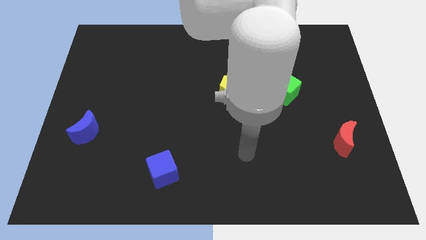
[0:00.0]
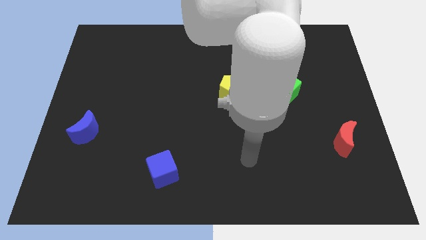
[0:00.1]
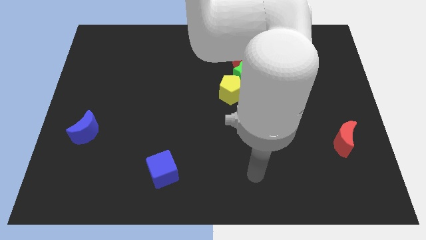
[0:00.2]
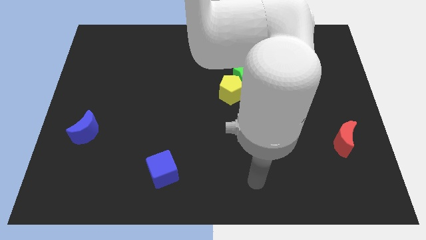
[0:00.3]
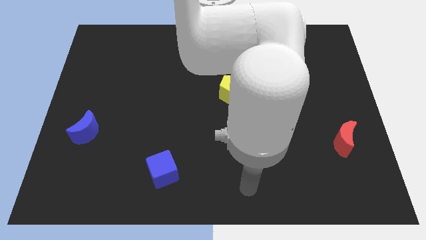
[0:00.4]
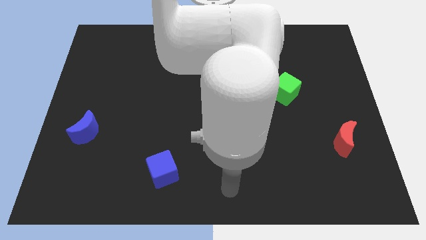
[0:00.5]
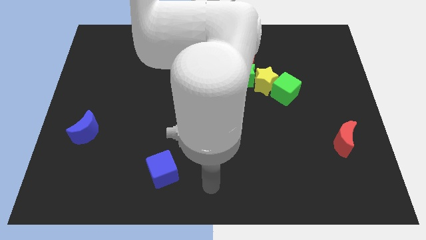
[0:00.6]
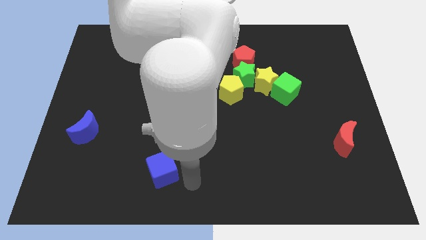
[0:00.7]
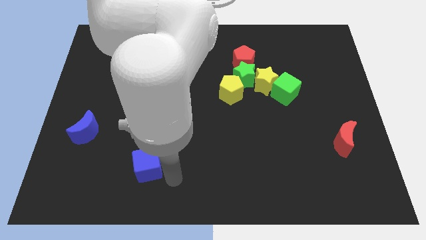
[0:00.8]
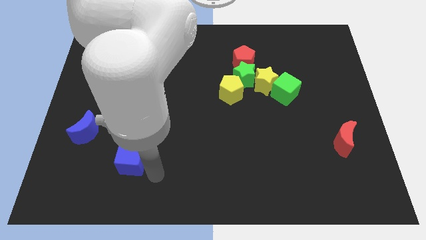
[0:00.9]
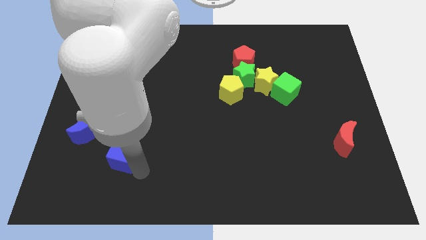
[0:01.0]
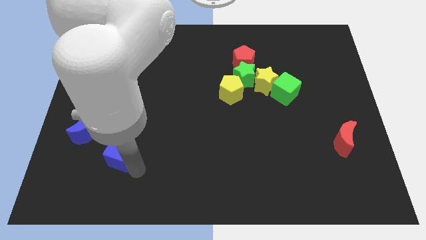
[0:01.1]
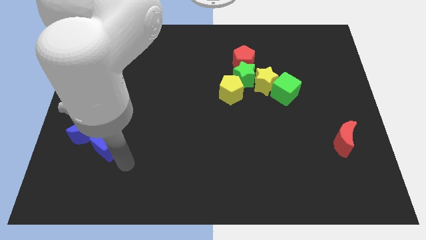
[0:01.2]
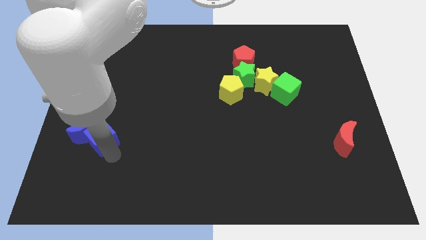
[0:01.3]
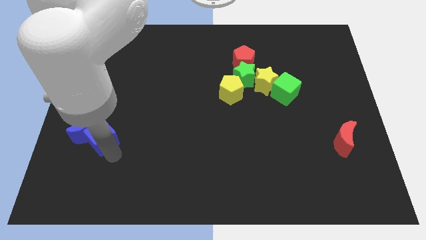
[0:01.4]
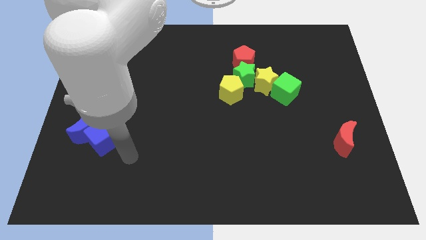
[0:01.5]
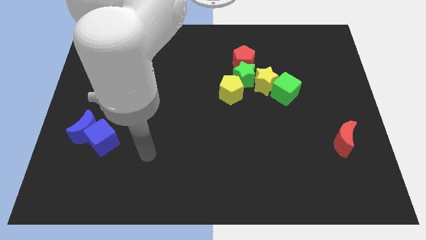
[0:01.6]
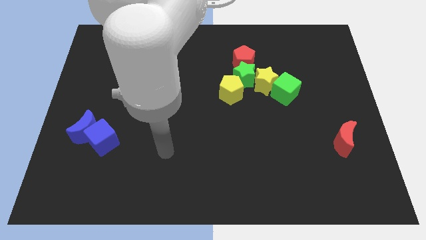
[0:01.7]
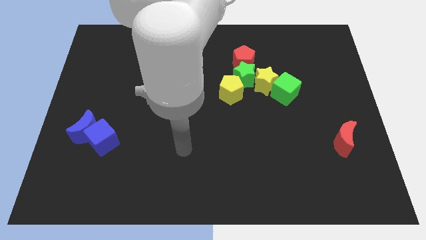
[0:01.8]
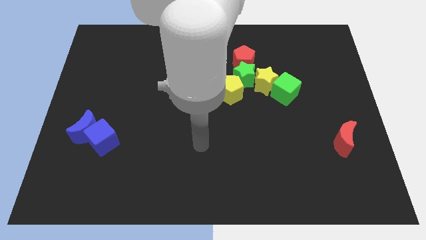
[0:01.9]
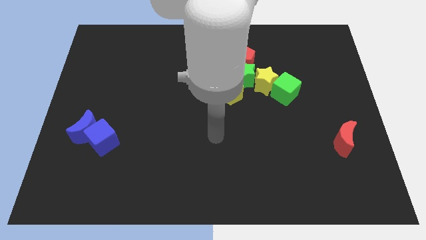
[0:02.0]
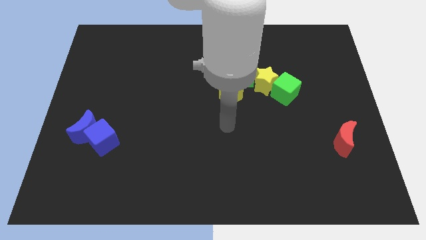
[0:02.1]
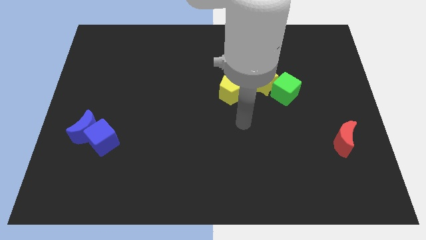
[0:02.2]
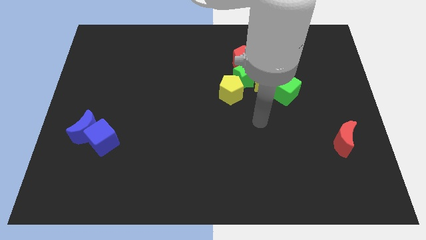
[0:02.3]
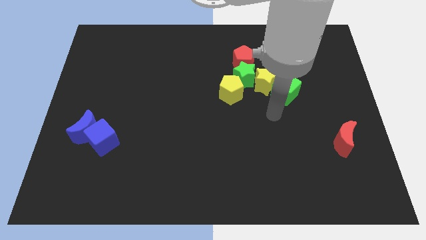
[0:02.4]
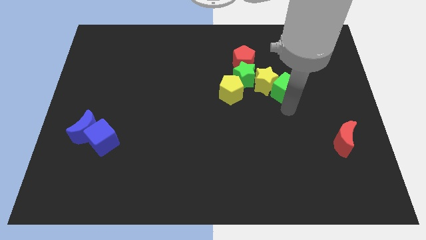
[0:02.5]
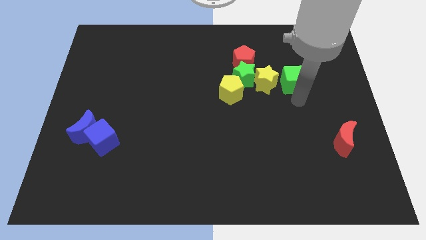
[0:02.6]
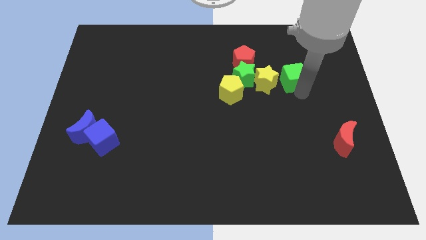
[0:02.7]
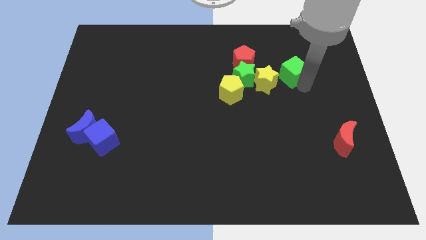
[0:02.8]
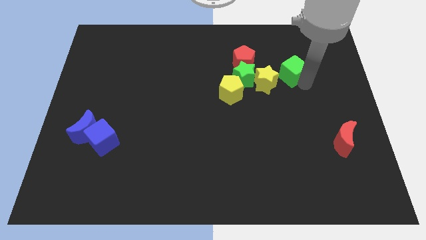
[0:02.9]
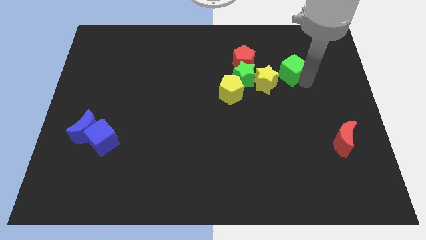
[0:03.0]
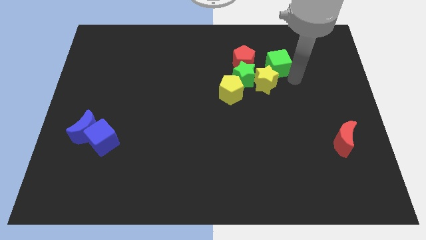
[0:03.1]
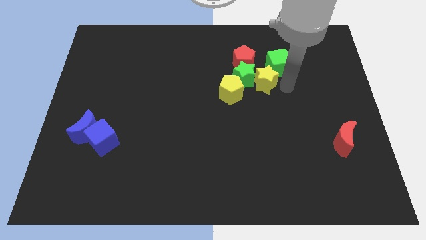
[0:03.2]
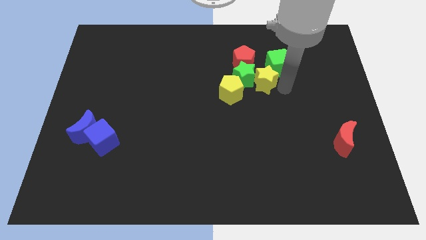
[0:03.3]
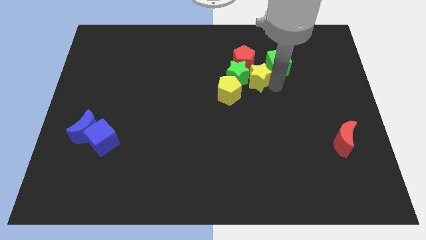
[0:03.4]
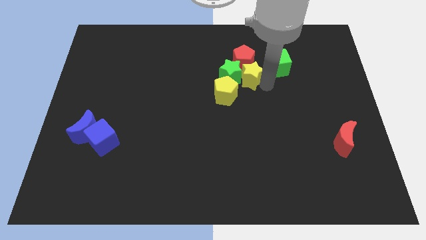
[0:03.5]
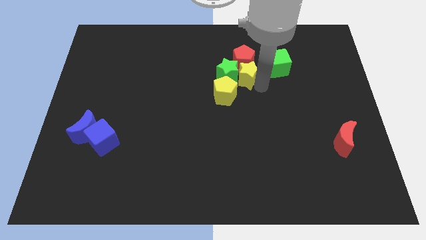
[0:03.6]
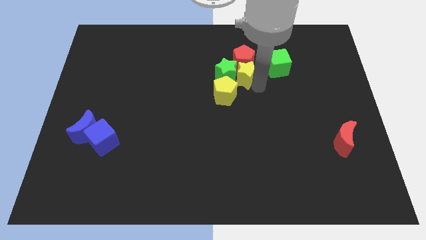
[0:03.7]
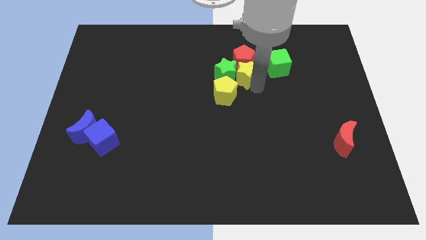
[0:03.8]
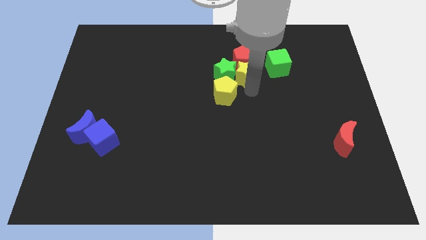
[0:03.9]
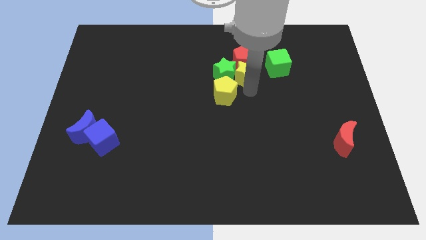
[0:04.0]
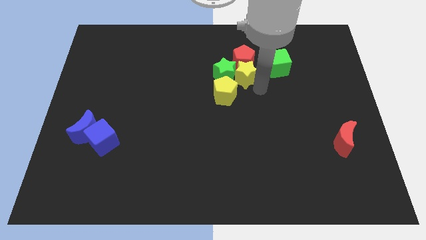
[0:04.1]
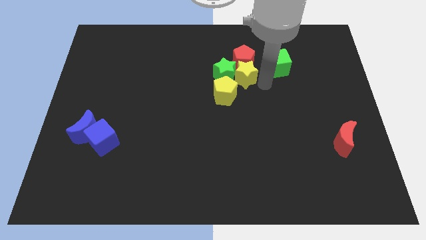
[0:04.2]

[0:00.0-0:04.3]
place yellow star below red pentagon

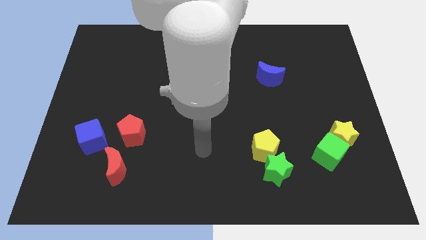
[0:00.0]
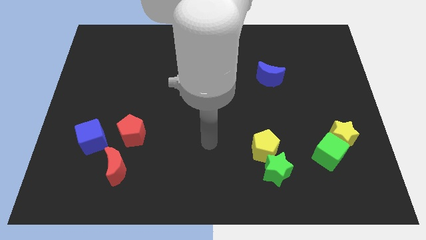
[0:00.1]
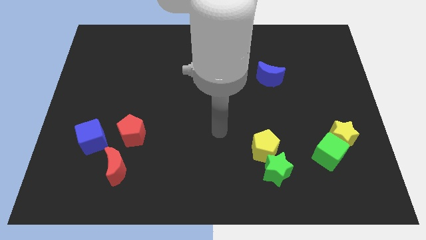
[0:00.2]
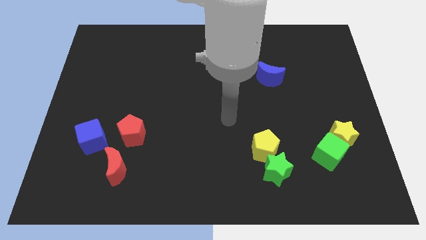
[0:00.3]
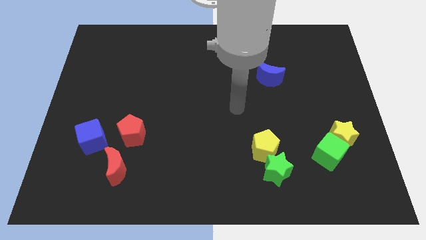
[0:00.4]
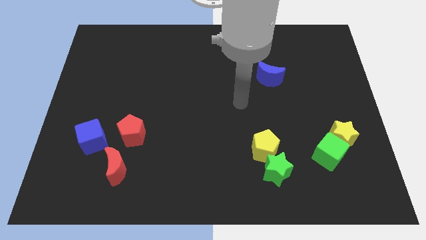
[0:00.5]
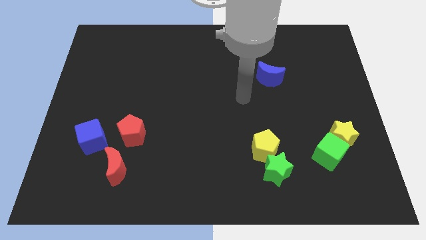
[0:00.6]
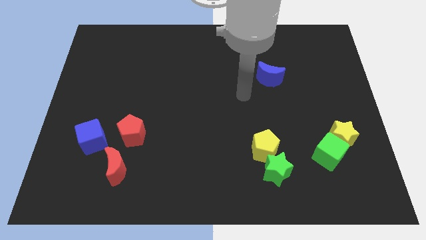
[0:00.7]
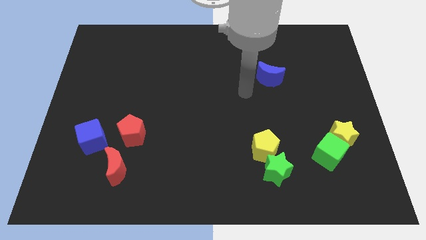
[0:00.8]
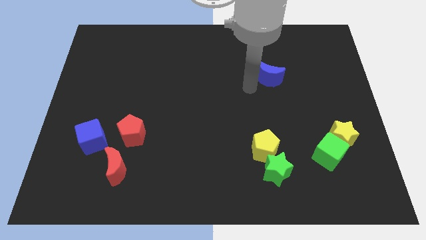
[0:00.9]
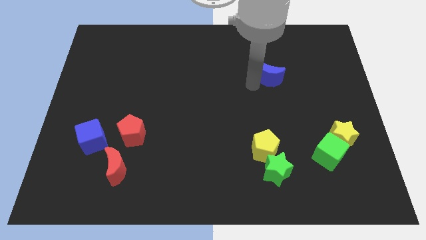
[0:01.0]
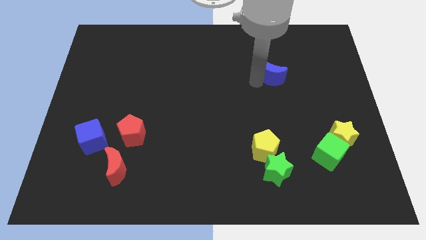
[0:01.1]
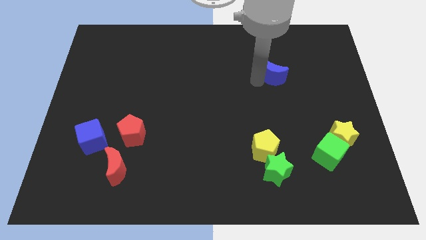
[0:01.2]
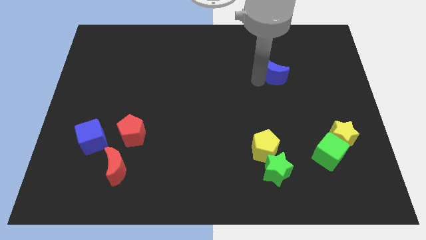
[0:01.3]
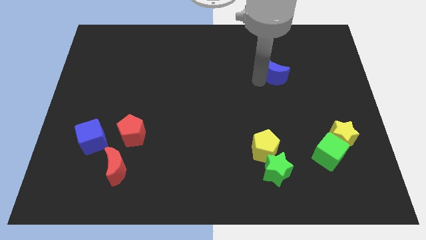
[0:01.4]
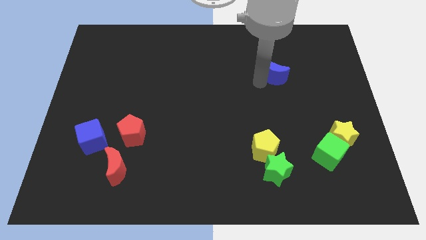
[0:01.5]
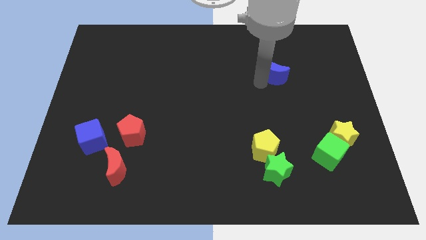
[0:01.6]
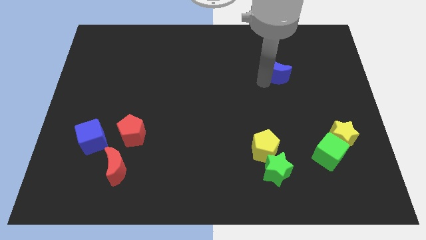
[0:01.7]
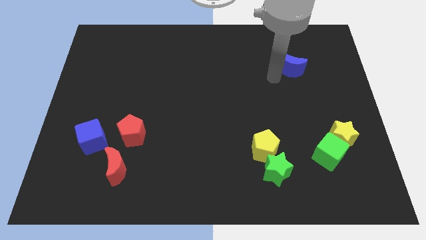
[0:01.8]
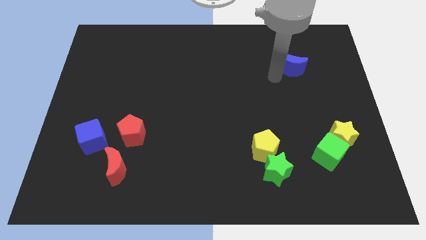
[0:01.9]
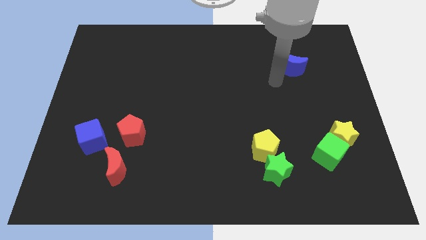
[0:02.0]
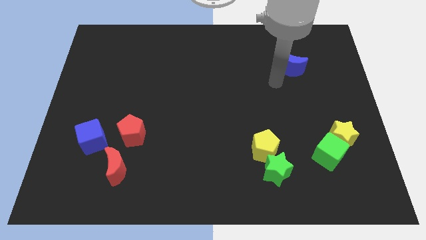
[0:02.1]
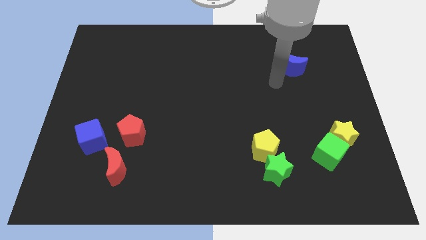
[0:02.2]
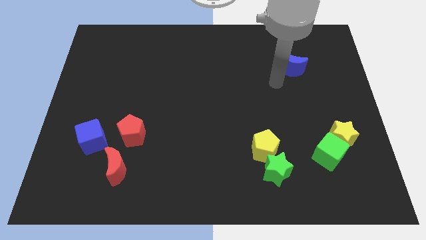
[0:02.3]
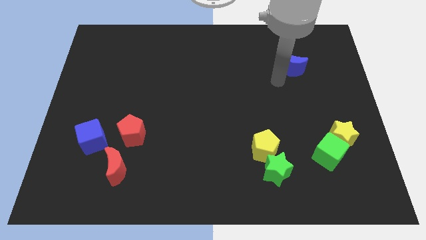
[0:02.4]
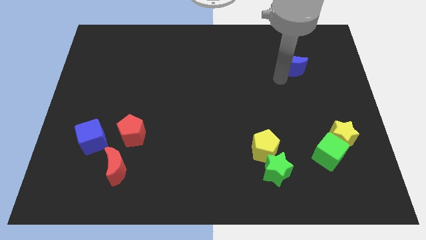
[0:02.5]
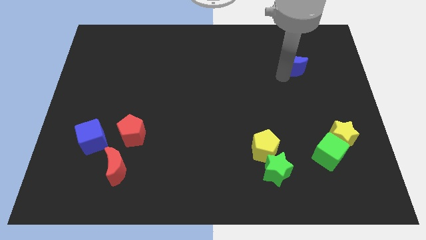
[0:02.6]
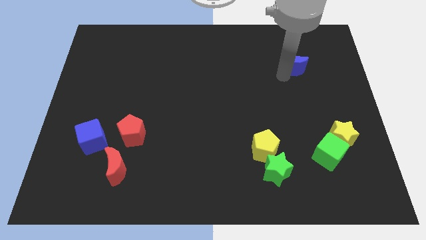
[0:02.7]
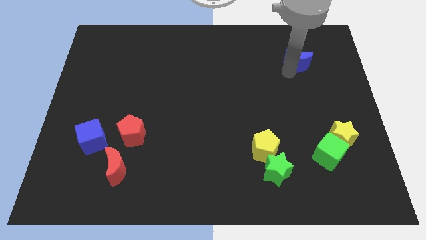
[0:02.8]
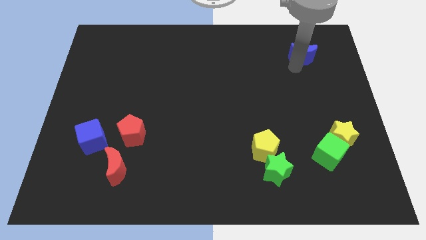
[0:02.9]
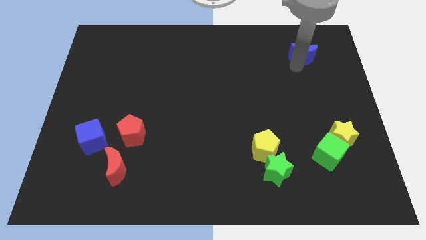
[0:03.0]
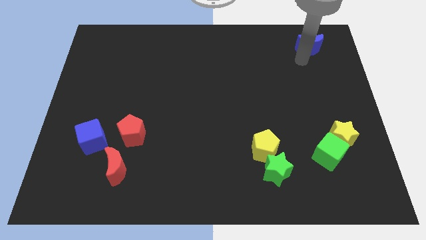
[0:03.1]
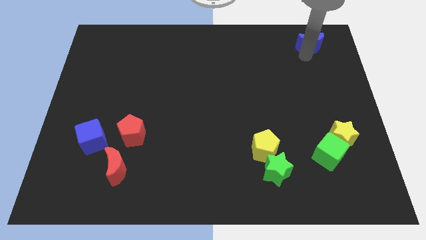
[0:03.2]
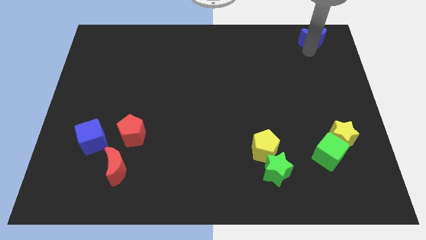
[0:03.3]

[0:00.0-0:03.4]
move blue moon to the top right

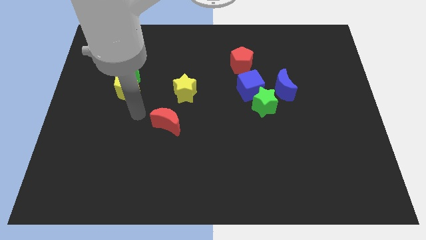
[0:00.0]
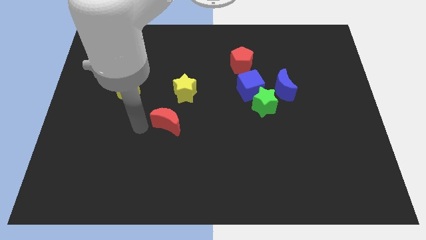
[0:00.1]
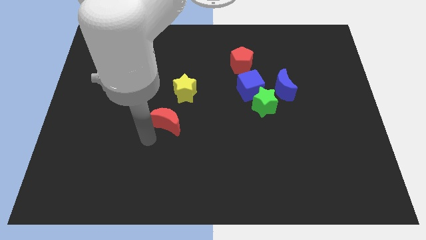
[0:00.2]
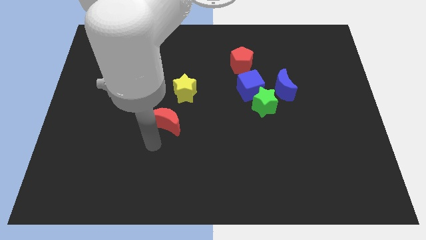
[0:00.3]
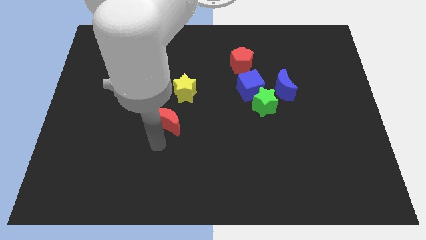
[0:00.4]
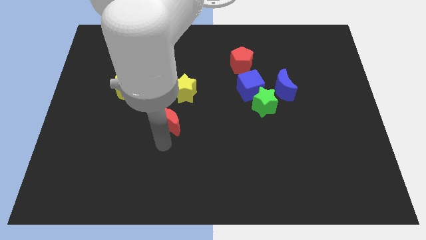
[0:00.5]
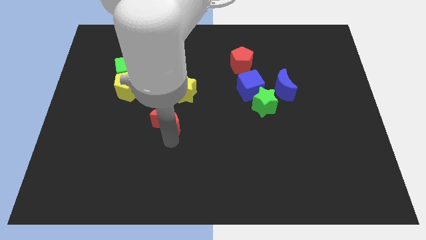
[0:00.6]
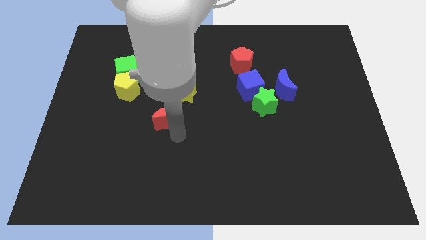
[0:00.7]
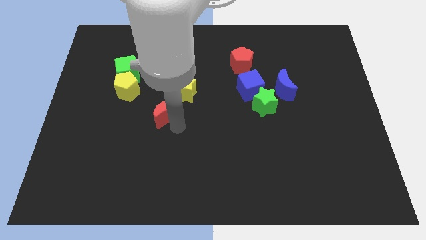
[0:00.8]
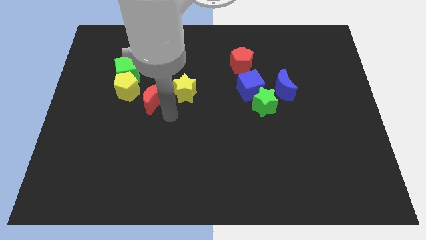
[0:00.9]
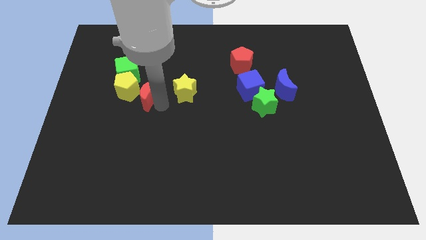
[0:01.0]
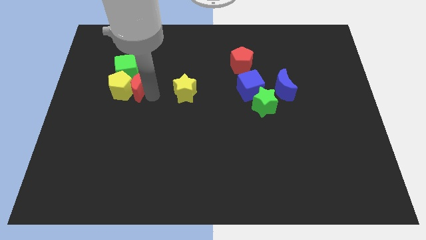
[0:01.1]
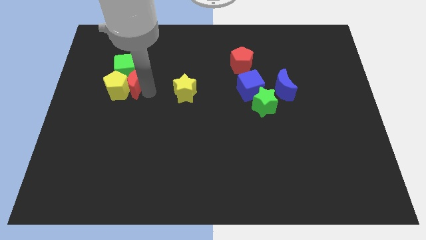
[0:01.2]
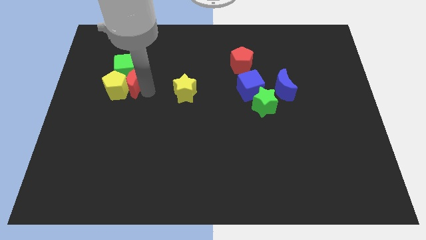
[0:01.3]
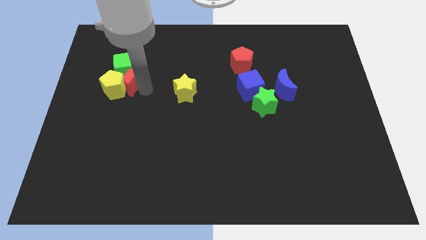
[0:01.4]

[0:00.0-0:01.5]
slide the red crescent into the yellow pentagon and green cube
